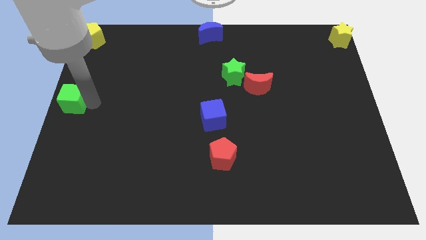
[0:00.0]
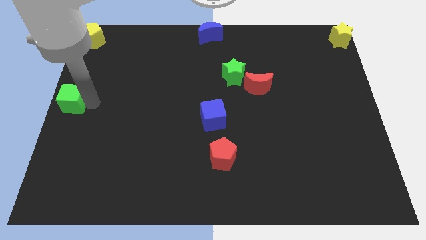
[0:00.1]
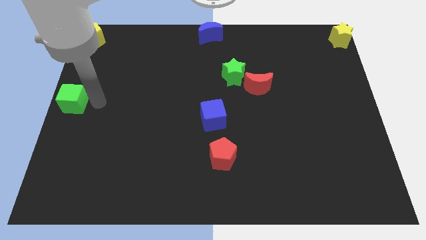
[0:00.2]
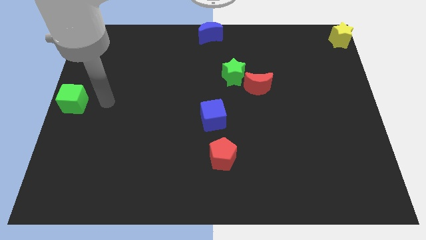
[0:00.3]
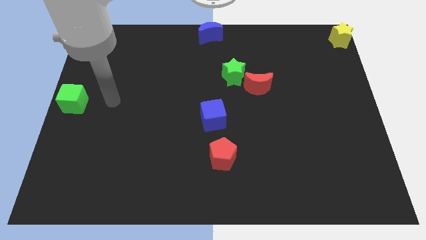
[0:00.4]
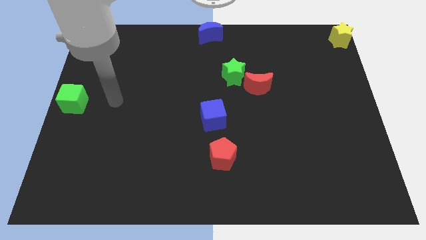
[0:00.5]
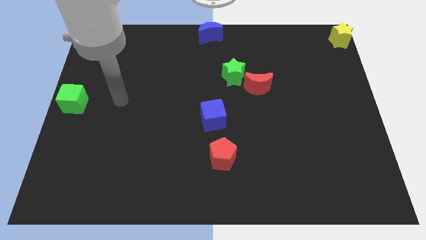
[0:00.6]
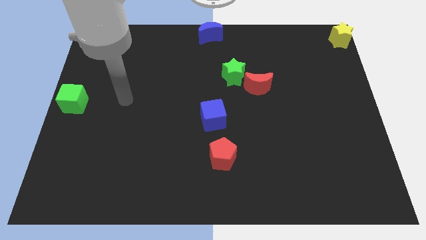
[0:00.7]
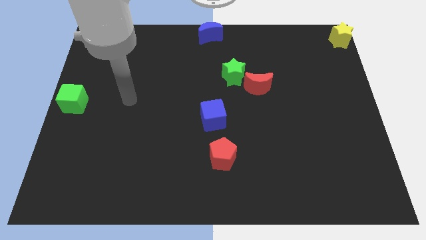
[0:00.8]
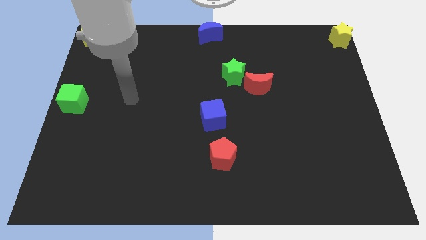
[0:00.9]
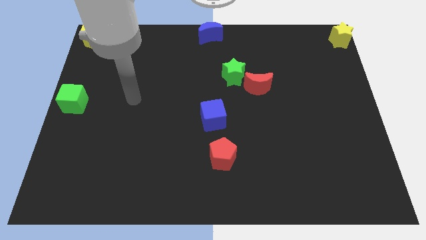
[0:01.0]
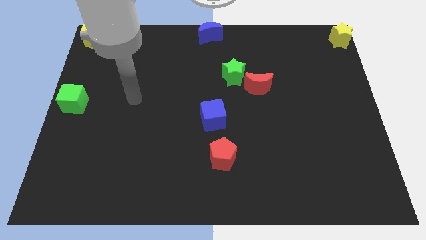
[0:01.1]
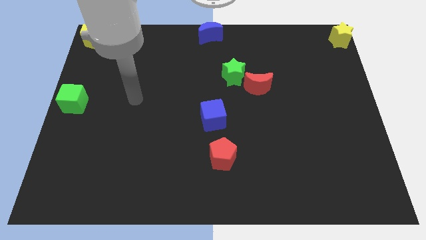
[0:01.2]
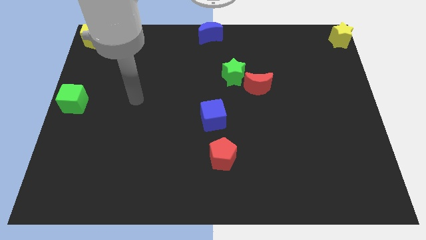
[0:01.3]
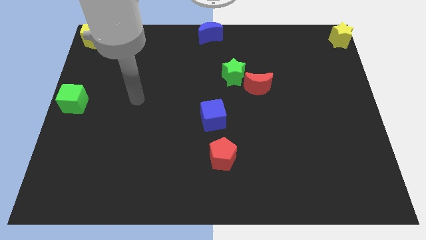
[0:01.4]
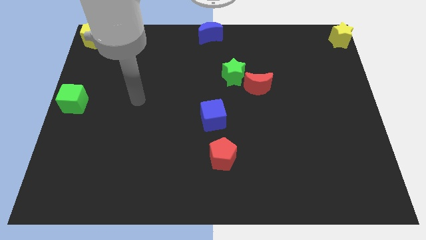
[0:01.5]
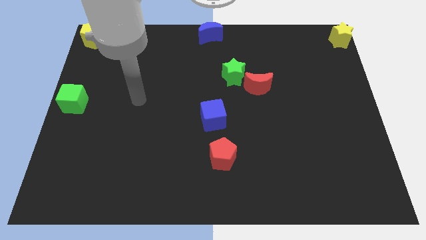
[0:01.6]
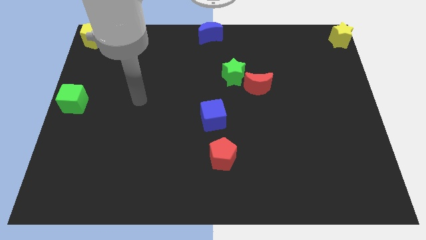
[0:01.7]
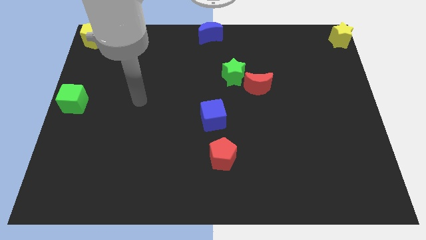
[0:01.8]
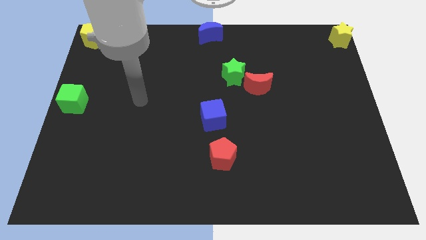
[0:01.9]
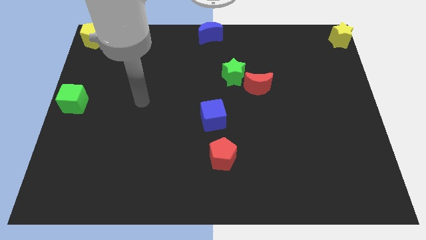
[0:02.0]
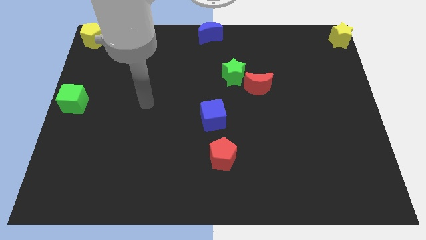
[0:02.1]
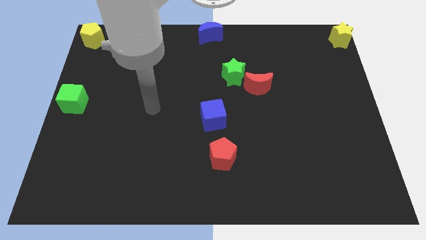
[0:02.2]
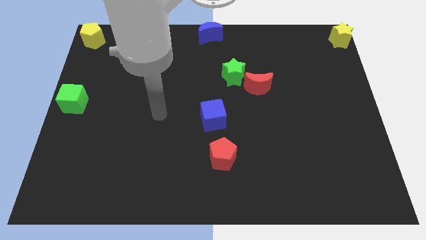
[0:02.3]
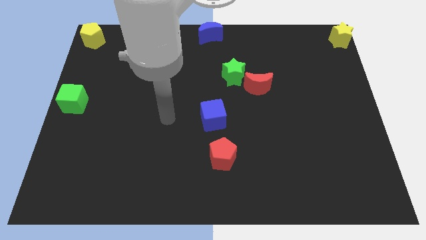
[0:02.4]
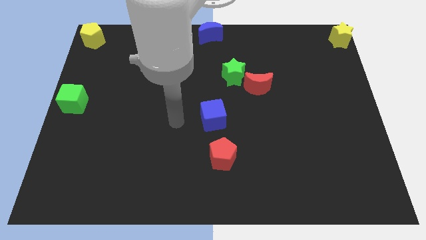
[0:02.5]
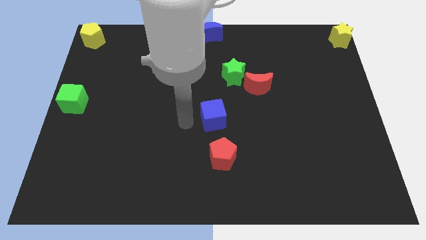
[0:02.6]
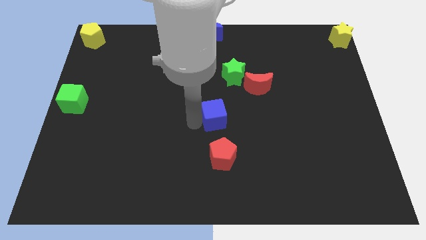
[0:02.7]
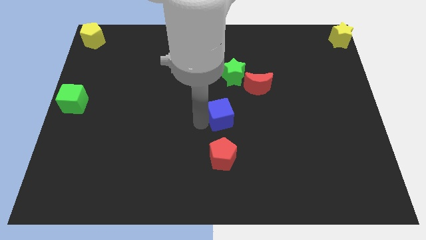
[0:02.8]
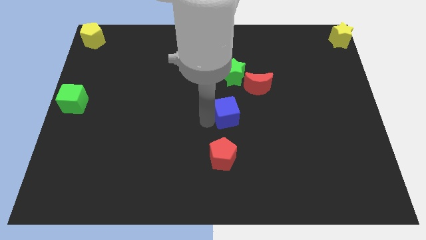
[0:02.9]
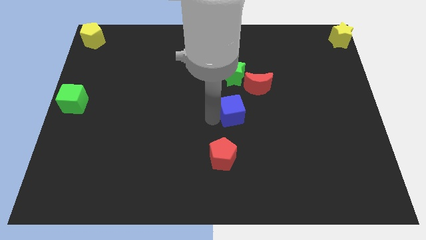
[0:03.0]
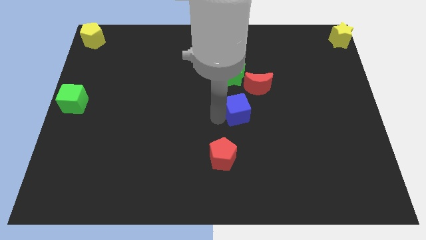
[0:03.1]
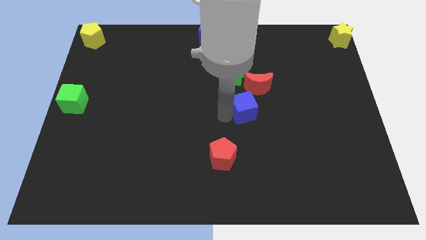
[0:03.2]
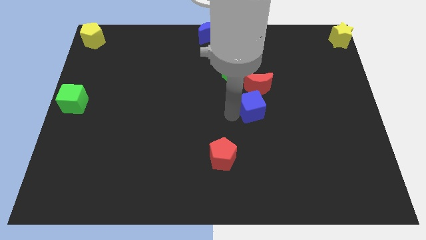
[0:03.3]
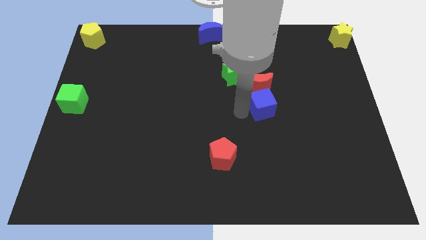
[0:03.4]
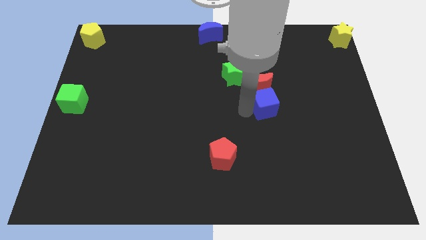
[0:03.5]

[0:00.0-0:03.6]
push the blue cube below the red crescent

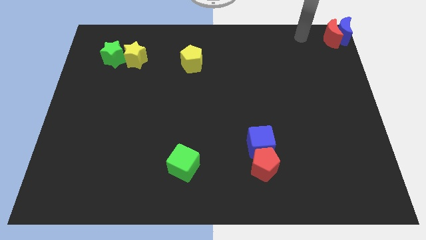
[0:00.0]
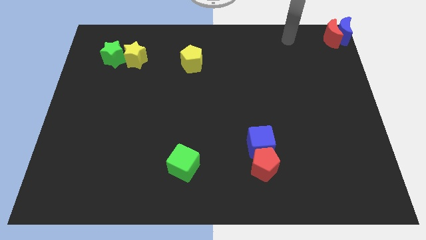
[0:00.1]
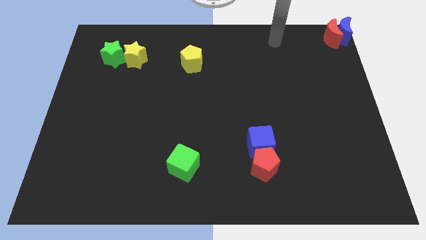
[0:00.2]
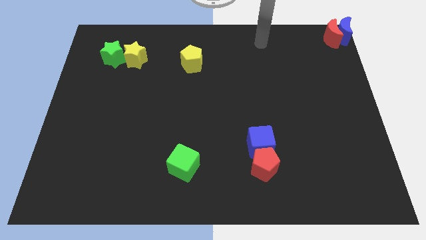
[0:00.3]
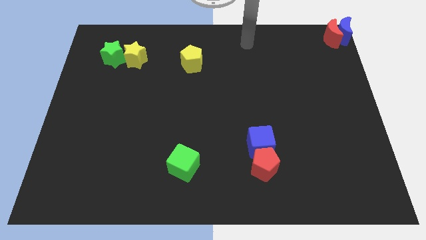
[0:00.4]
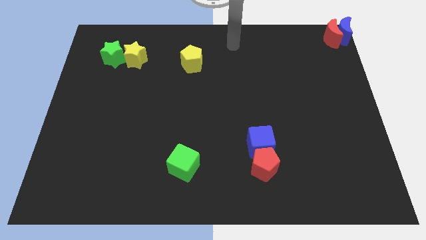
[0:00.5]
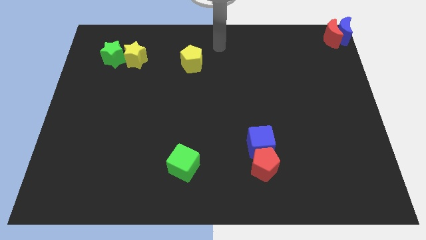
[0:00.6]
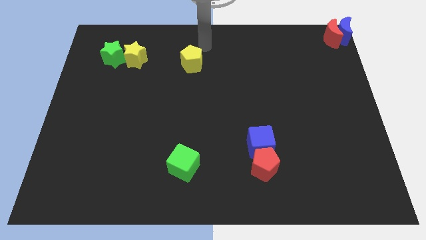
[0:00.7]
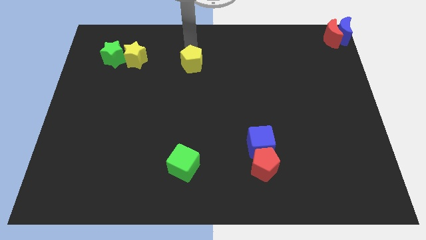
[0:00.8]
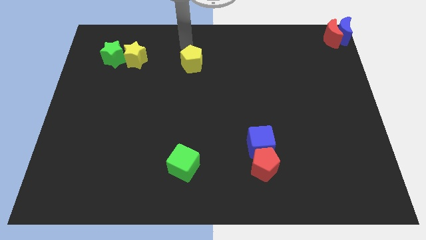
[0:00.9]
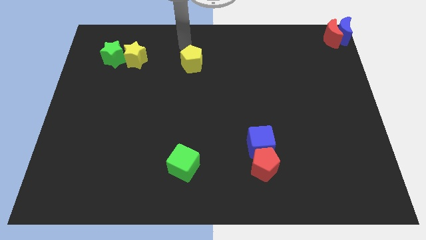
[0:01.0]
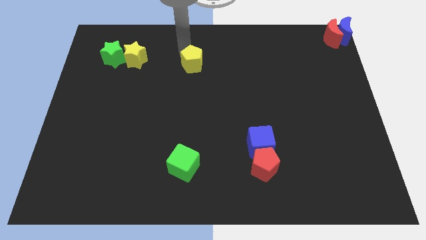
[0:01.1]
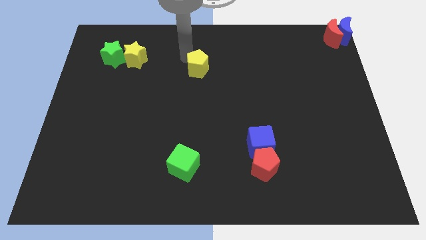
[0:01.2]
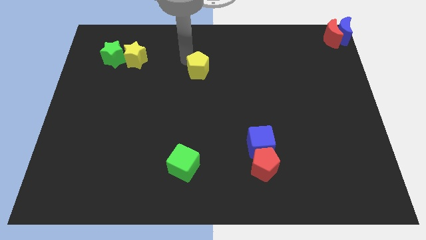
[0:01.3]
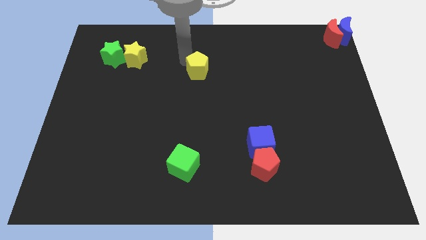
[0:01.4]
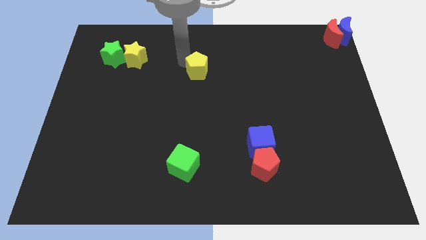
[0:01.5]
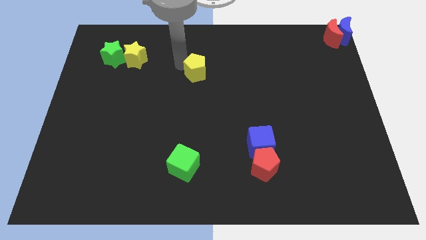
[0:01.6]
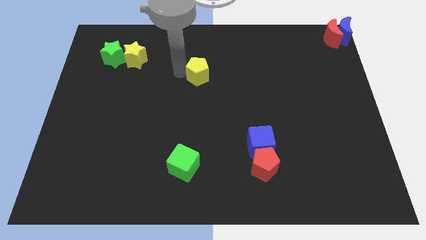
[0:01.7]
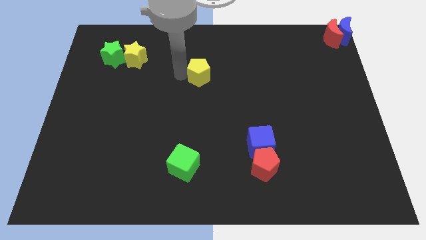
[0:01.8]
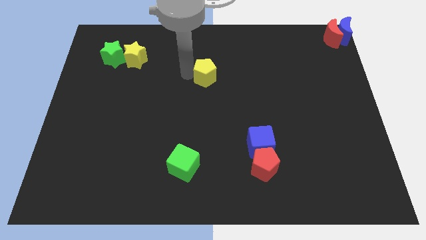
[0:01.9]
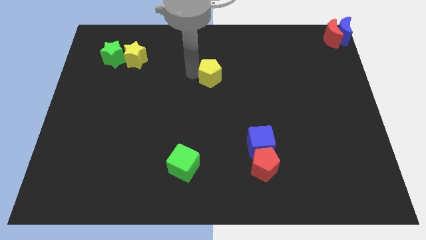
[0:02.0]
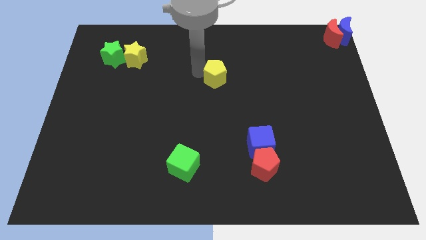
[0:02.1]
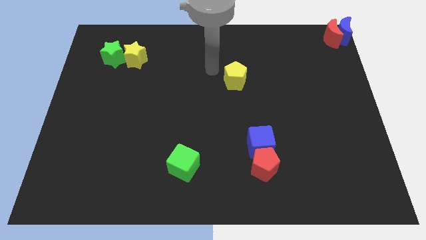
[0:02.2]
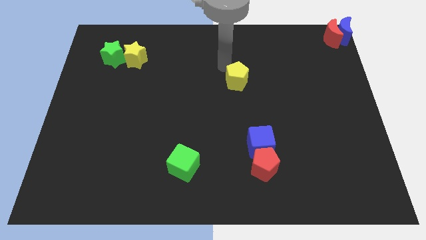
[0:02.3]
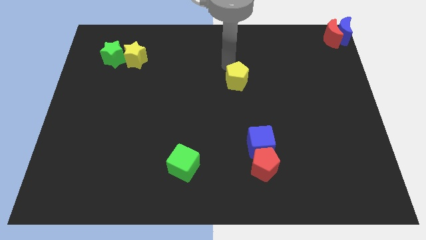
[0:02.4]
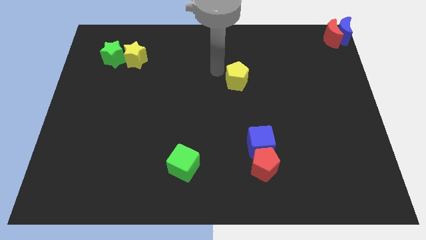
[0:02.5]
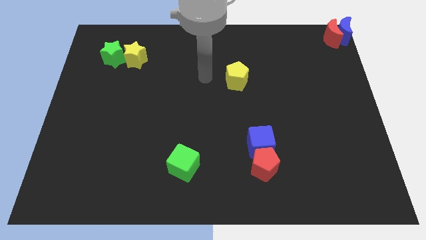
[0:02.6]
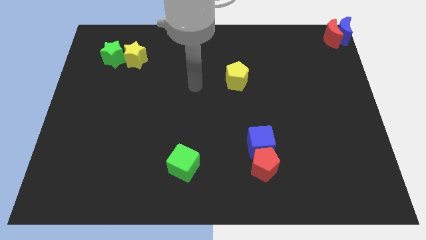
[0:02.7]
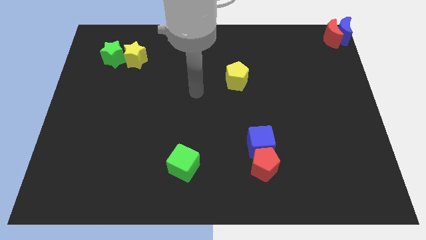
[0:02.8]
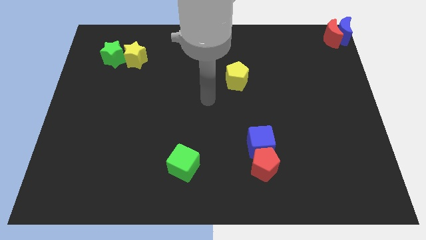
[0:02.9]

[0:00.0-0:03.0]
place the yellow pentagon at the top left of the blue cube

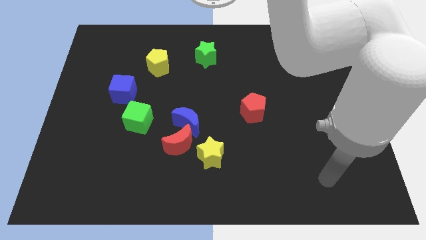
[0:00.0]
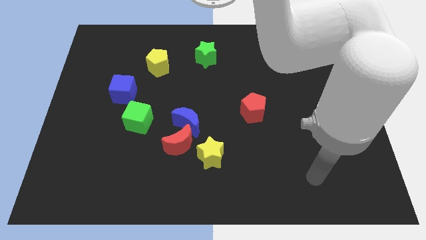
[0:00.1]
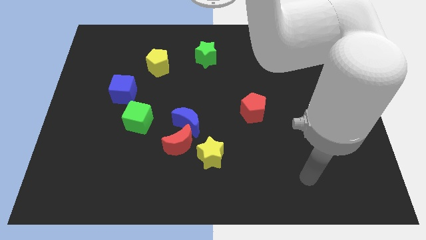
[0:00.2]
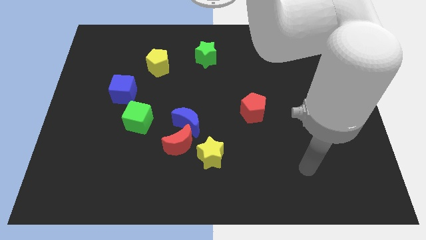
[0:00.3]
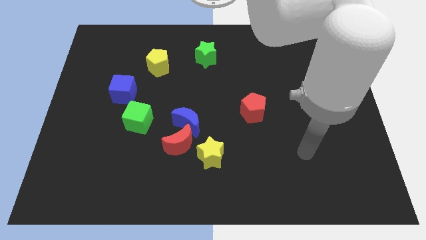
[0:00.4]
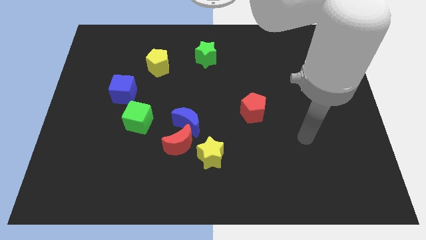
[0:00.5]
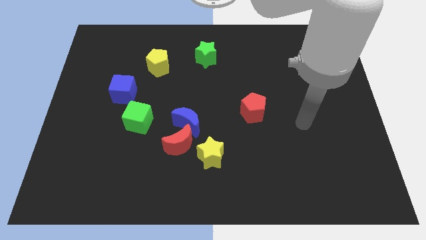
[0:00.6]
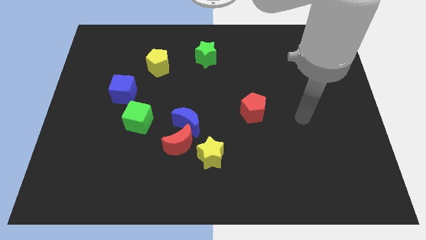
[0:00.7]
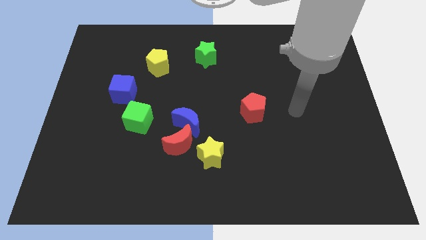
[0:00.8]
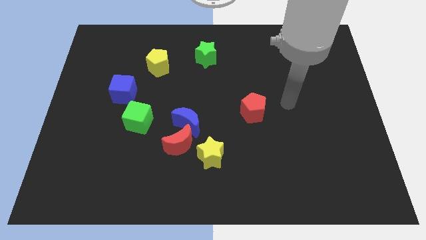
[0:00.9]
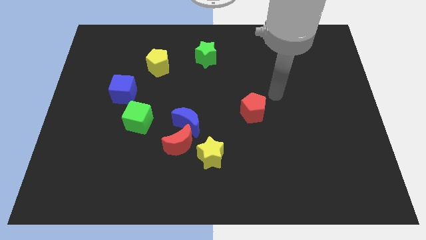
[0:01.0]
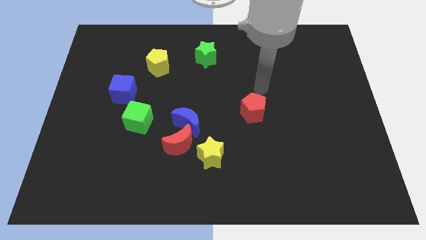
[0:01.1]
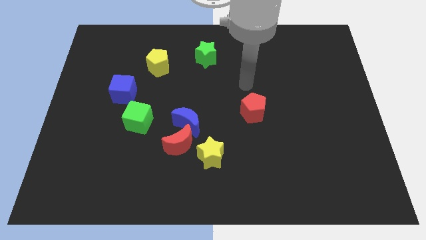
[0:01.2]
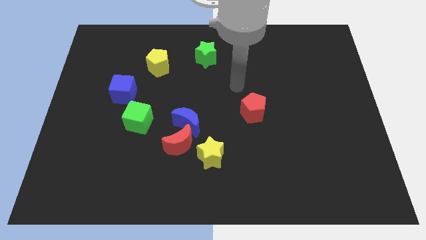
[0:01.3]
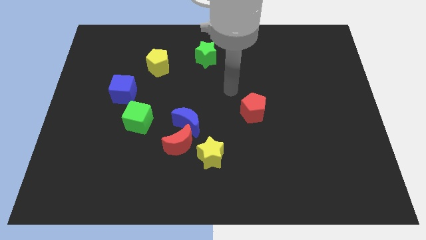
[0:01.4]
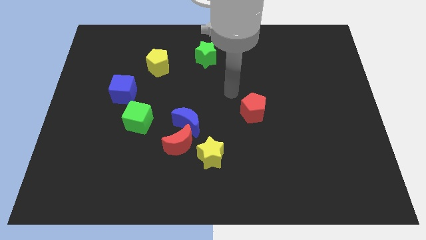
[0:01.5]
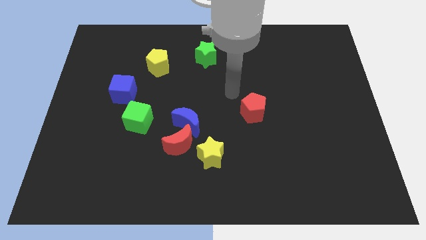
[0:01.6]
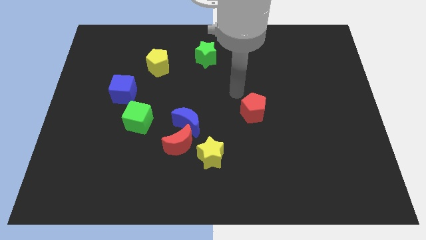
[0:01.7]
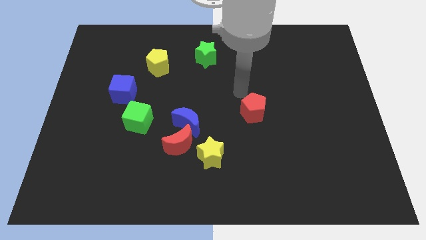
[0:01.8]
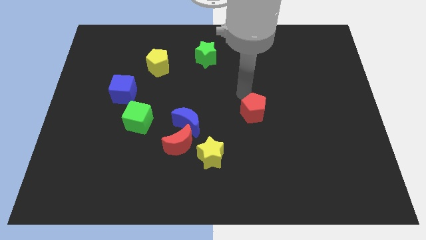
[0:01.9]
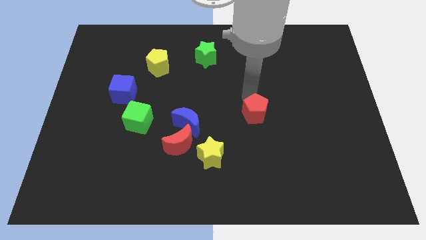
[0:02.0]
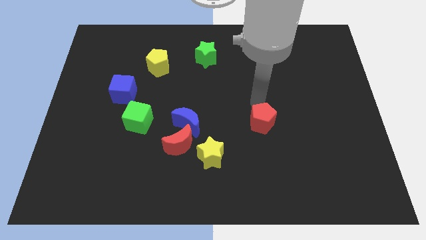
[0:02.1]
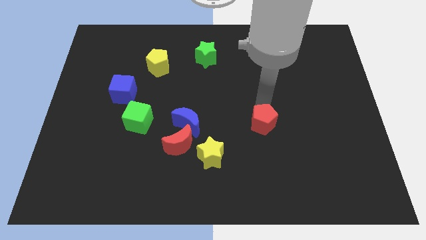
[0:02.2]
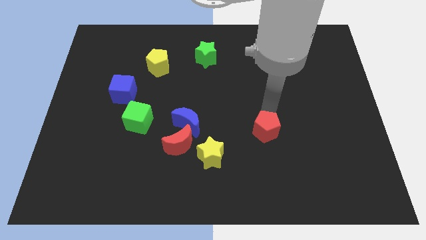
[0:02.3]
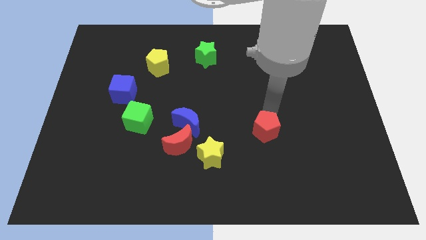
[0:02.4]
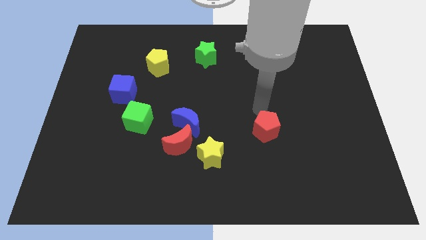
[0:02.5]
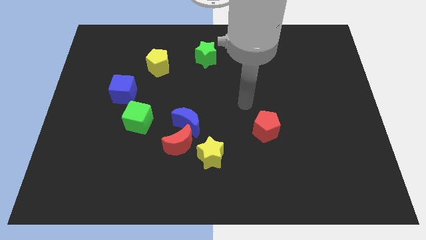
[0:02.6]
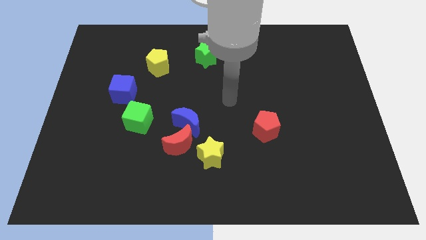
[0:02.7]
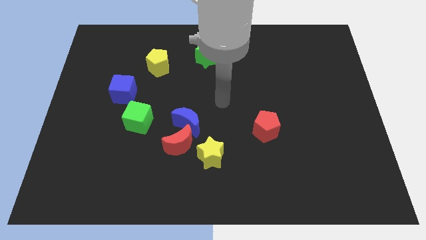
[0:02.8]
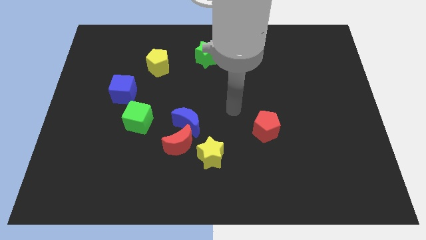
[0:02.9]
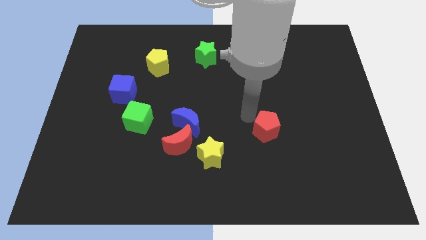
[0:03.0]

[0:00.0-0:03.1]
slide red pentagon down to the right of blue moon
